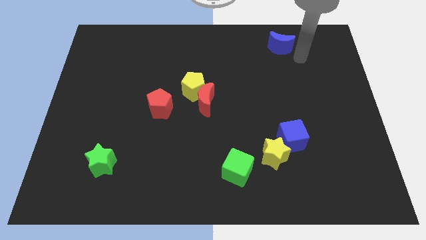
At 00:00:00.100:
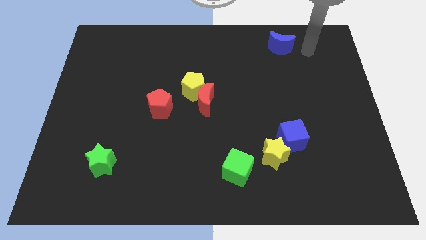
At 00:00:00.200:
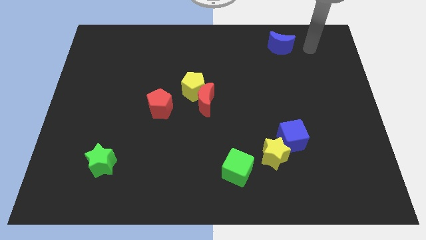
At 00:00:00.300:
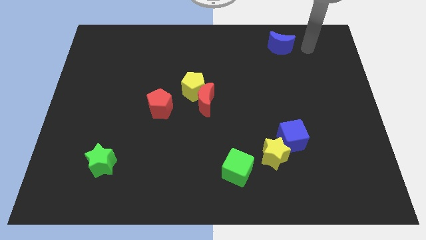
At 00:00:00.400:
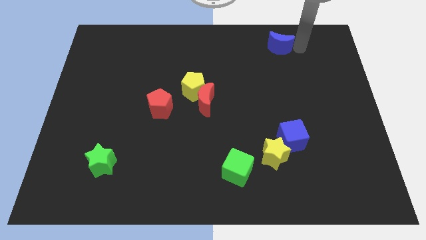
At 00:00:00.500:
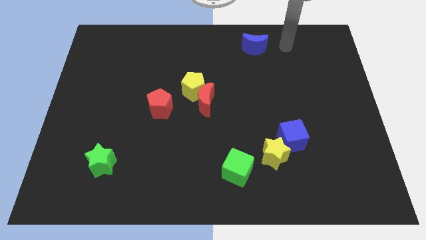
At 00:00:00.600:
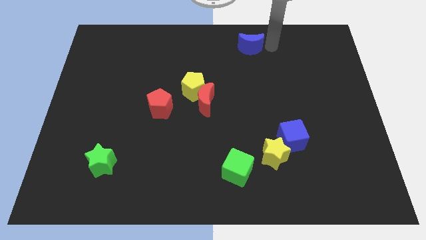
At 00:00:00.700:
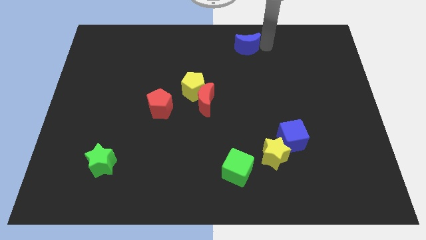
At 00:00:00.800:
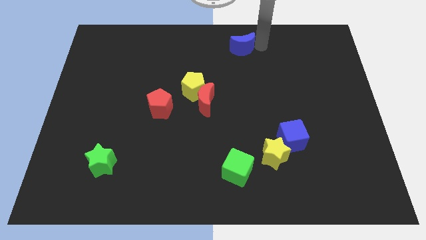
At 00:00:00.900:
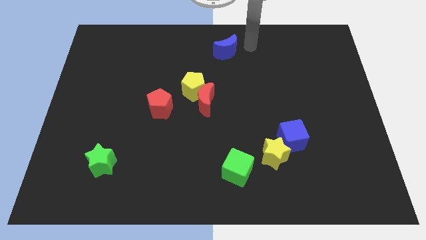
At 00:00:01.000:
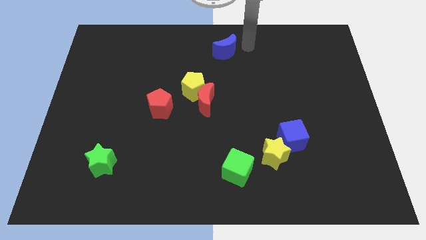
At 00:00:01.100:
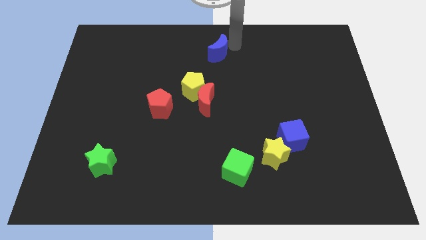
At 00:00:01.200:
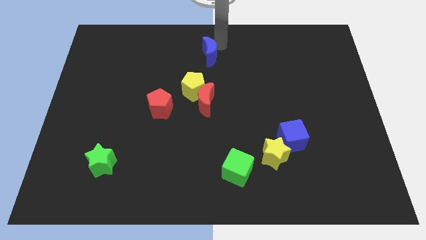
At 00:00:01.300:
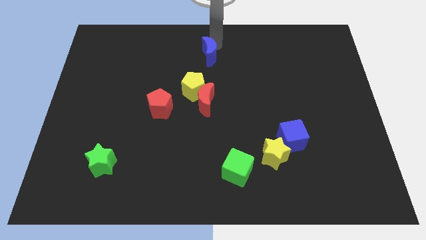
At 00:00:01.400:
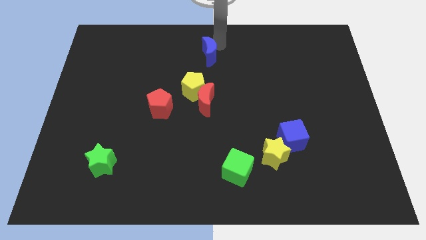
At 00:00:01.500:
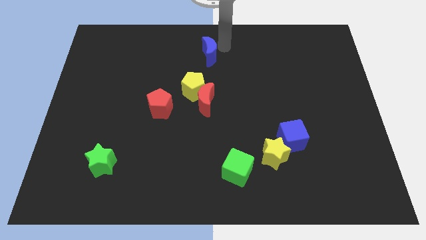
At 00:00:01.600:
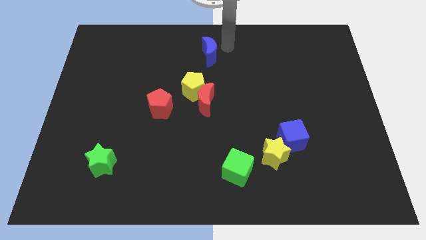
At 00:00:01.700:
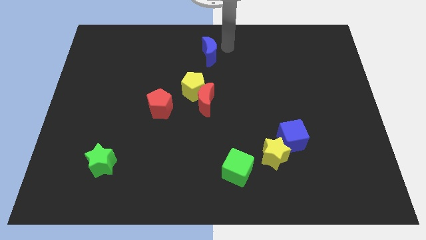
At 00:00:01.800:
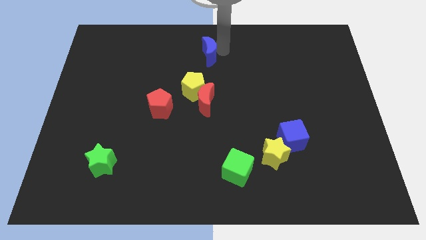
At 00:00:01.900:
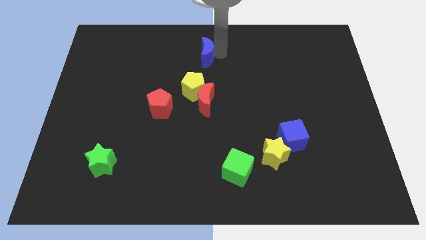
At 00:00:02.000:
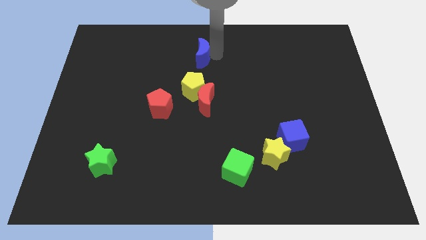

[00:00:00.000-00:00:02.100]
place blue moon on top of yellow pentagon

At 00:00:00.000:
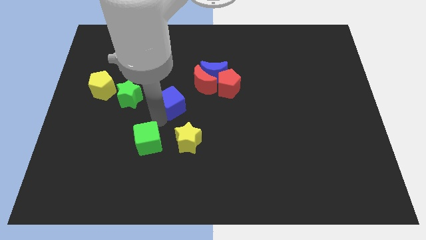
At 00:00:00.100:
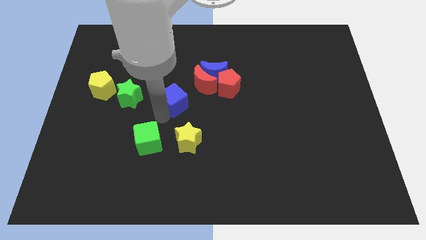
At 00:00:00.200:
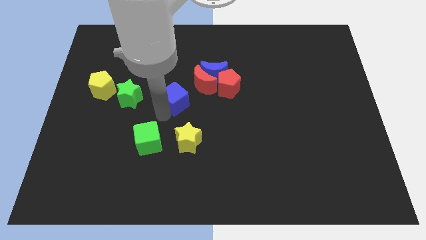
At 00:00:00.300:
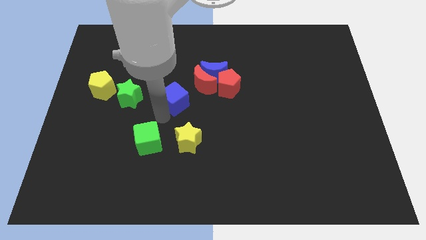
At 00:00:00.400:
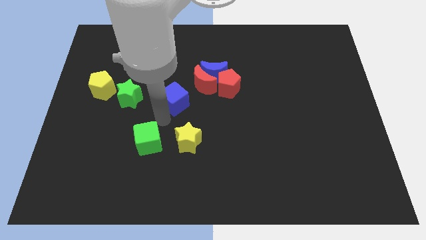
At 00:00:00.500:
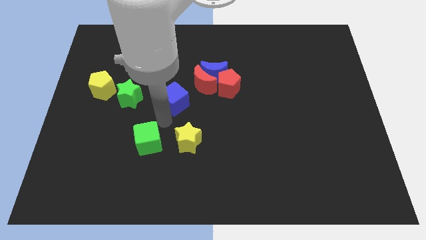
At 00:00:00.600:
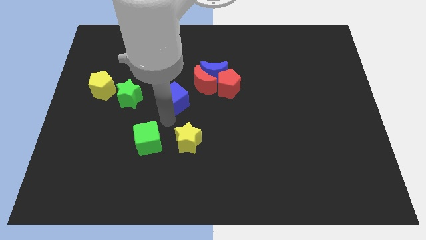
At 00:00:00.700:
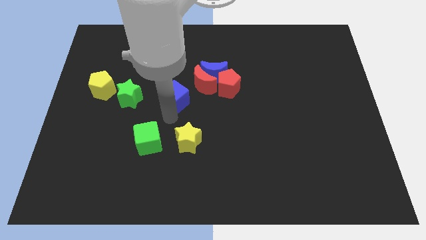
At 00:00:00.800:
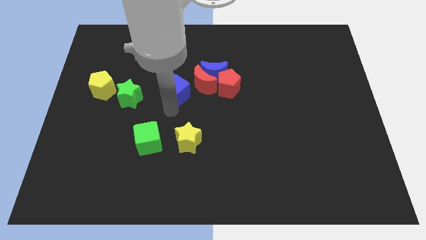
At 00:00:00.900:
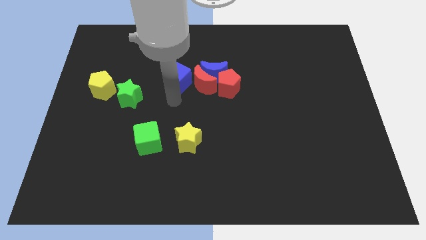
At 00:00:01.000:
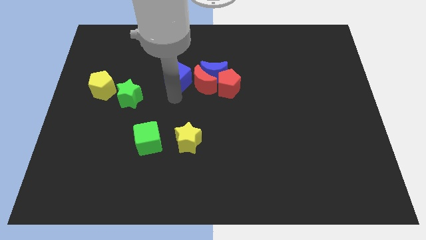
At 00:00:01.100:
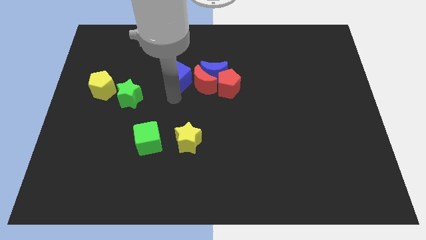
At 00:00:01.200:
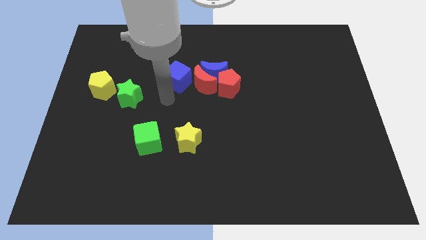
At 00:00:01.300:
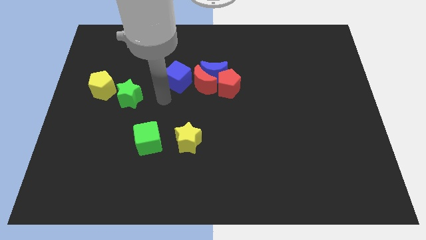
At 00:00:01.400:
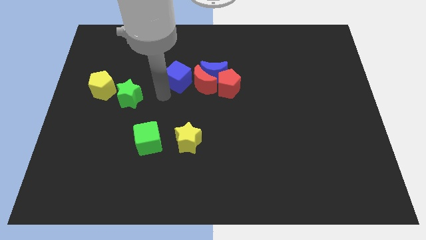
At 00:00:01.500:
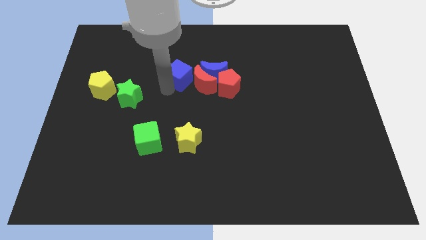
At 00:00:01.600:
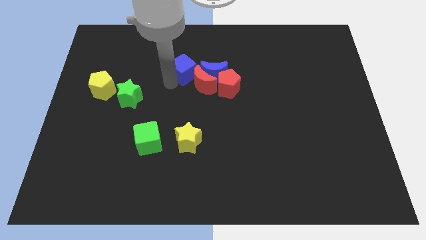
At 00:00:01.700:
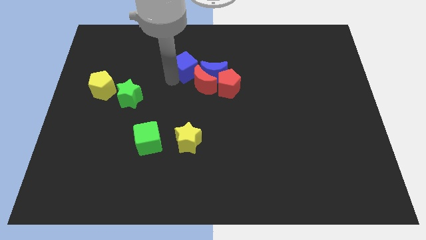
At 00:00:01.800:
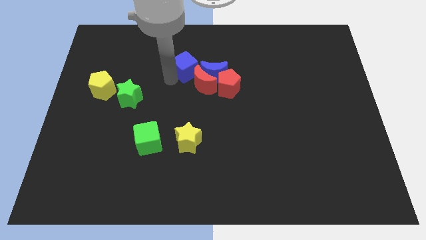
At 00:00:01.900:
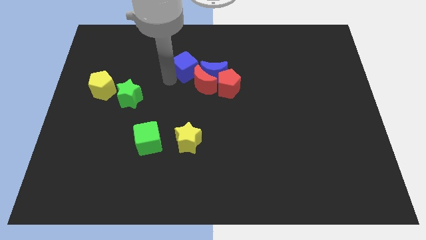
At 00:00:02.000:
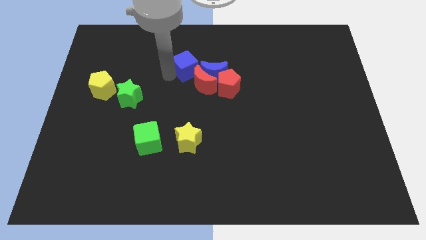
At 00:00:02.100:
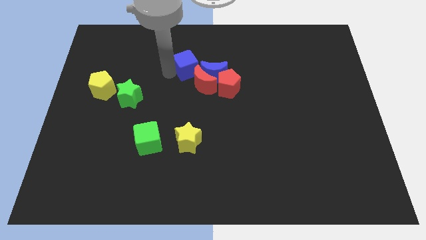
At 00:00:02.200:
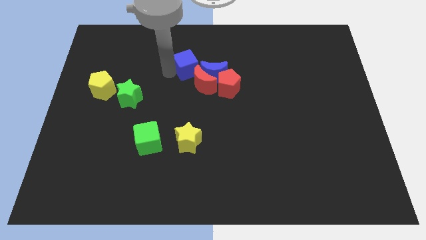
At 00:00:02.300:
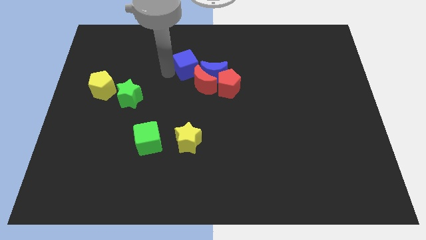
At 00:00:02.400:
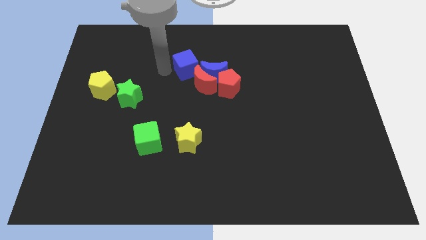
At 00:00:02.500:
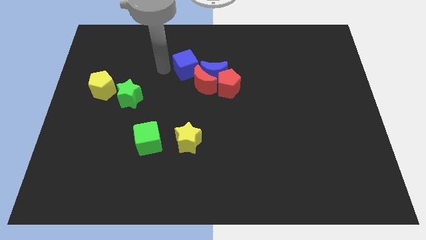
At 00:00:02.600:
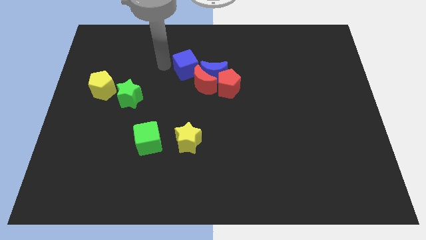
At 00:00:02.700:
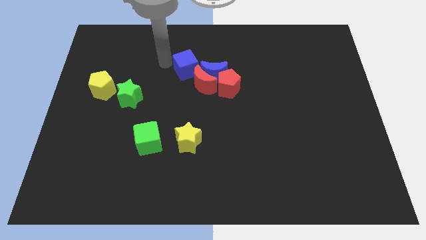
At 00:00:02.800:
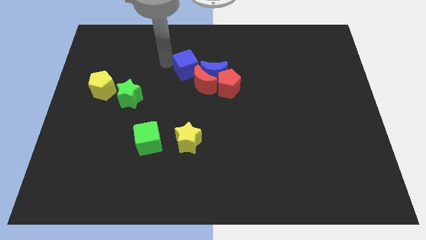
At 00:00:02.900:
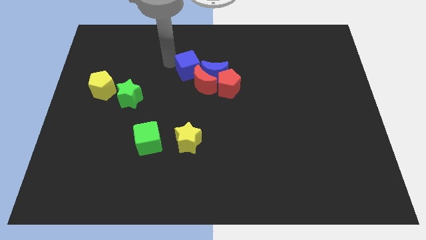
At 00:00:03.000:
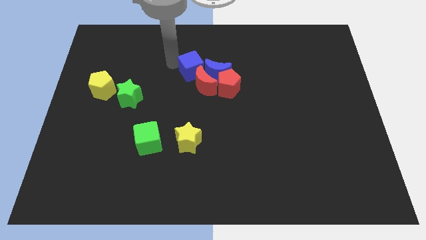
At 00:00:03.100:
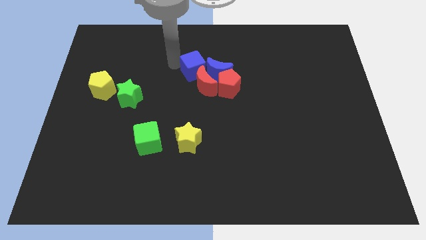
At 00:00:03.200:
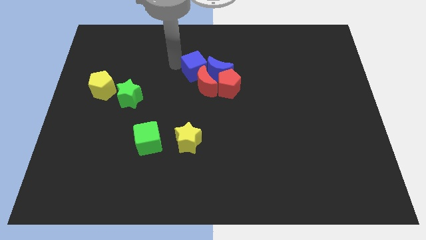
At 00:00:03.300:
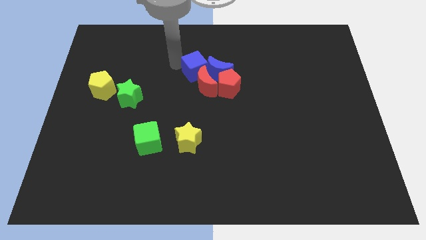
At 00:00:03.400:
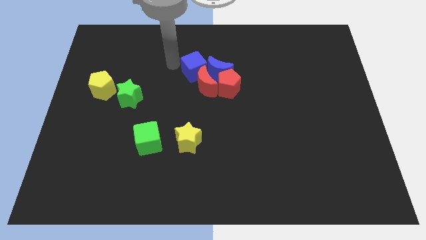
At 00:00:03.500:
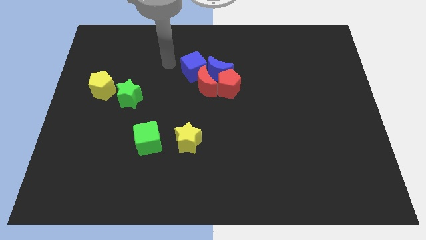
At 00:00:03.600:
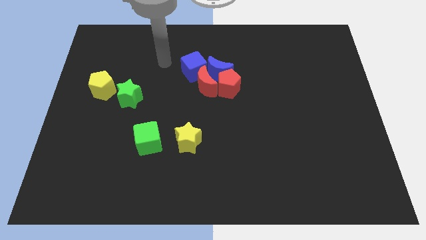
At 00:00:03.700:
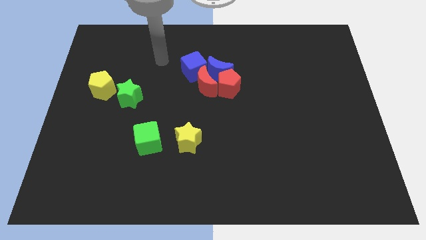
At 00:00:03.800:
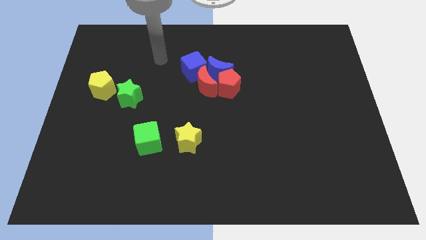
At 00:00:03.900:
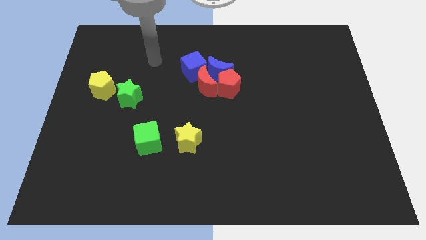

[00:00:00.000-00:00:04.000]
push the blue cube into the blue crescent

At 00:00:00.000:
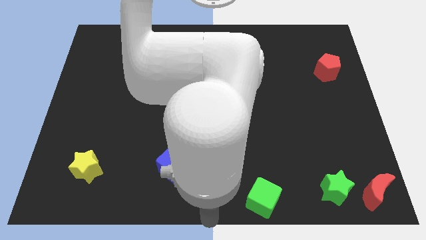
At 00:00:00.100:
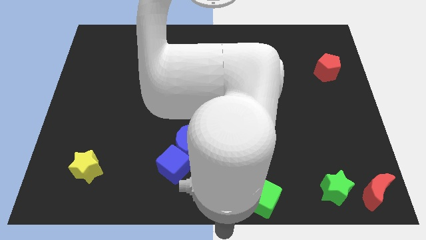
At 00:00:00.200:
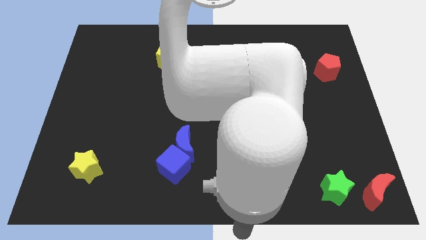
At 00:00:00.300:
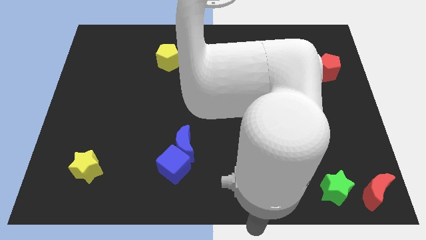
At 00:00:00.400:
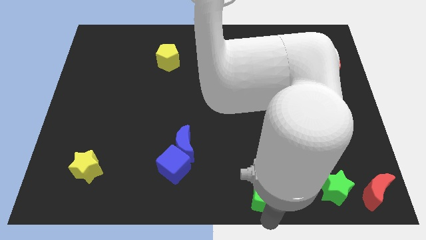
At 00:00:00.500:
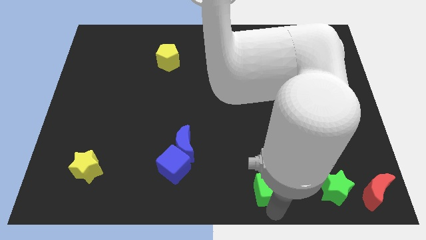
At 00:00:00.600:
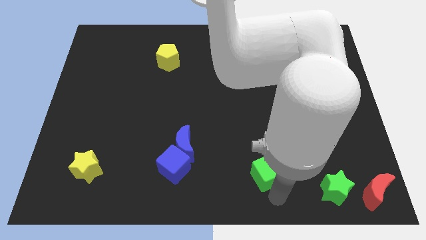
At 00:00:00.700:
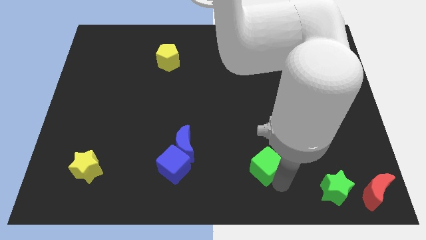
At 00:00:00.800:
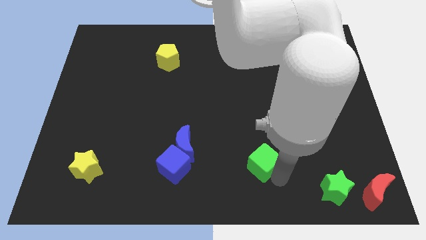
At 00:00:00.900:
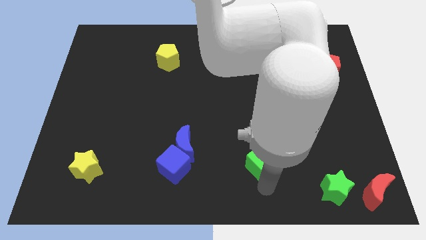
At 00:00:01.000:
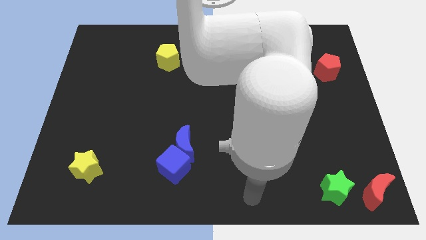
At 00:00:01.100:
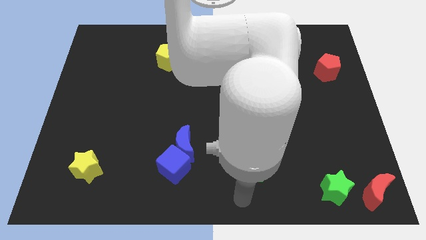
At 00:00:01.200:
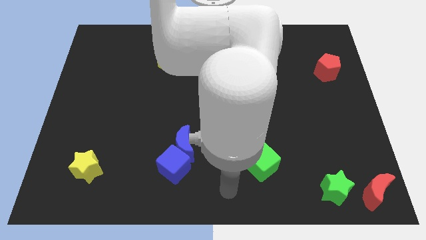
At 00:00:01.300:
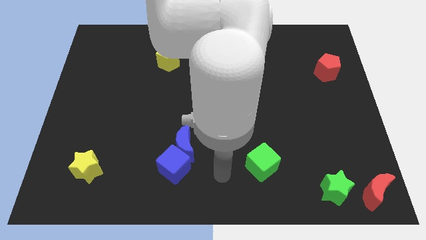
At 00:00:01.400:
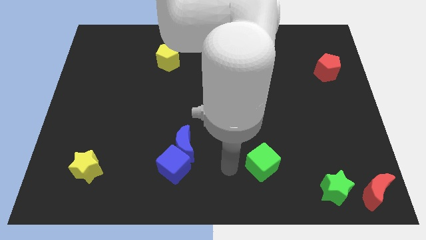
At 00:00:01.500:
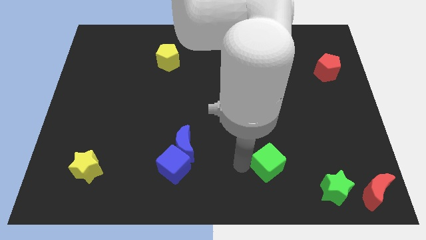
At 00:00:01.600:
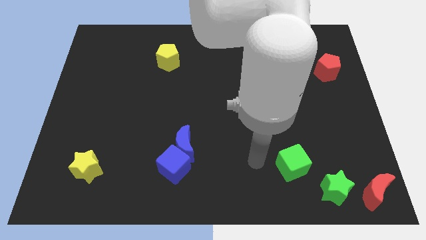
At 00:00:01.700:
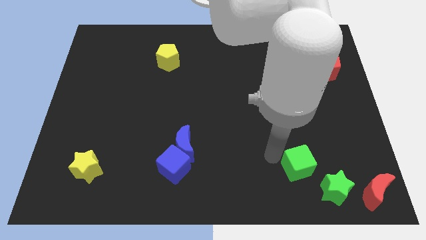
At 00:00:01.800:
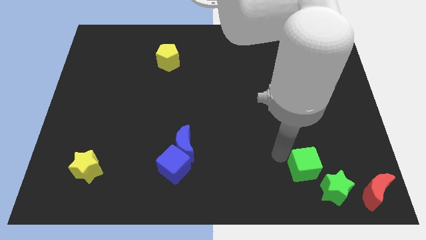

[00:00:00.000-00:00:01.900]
drag the green cube to the top left of the green star

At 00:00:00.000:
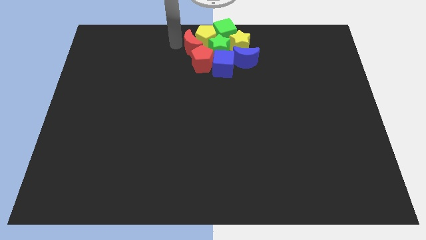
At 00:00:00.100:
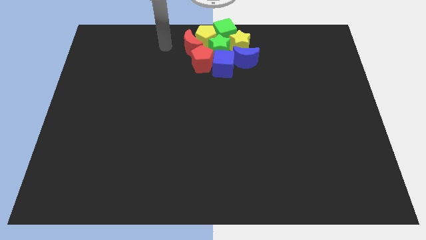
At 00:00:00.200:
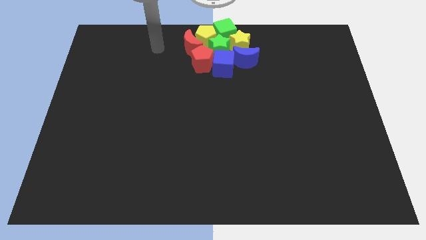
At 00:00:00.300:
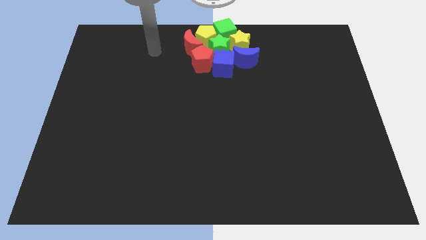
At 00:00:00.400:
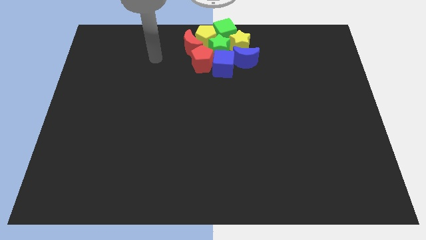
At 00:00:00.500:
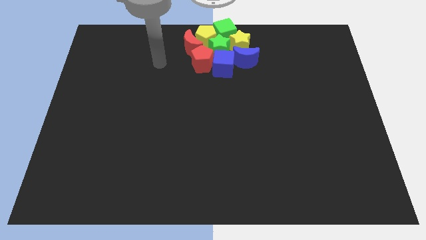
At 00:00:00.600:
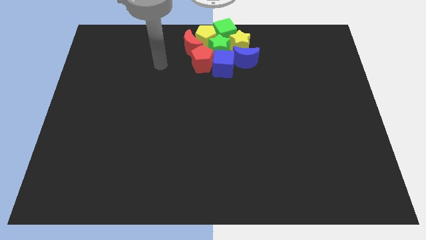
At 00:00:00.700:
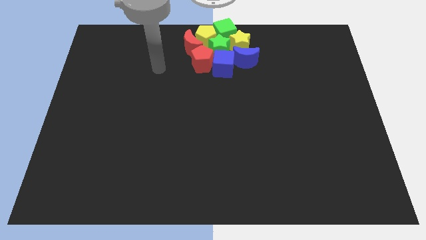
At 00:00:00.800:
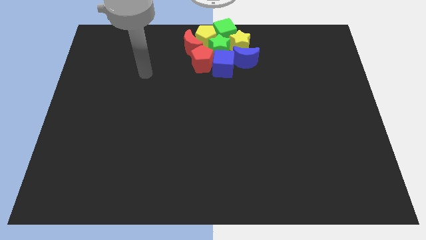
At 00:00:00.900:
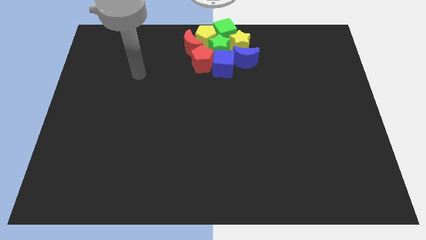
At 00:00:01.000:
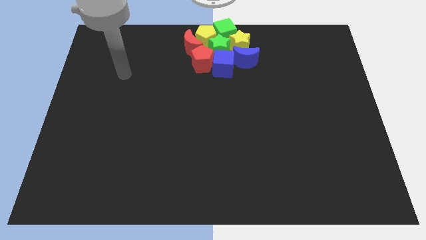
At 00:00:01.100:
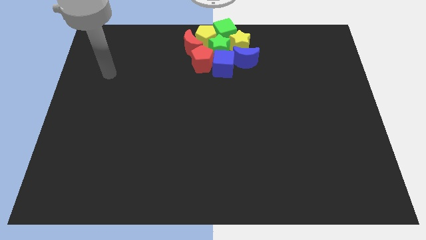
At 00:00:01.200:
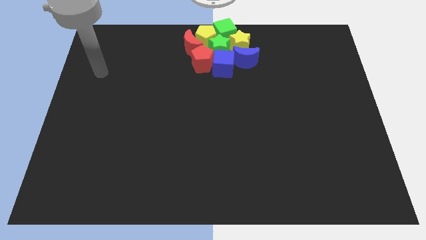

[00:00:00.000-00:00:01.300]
move the arm away from the group of blocks
